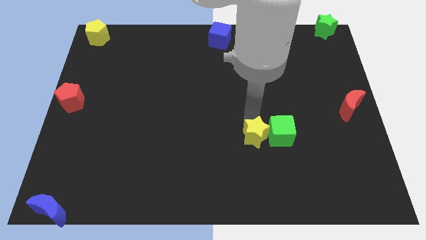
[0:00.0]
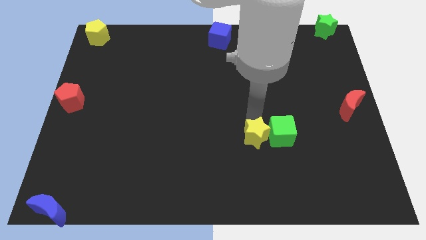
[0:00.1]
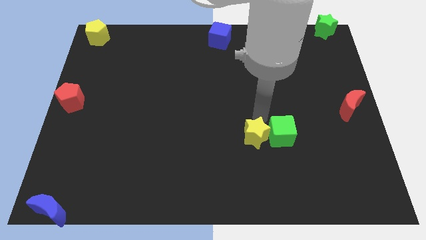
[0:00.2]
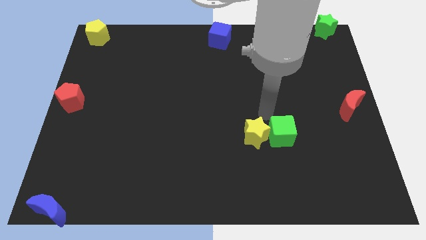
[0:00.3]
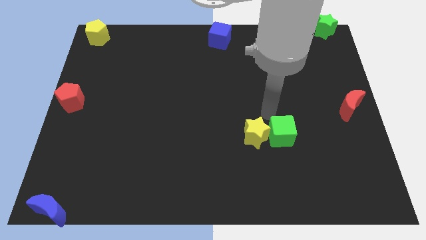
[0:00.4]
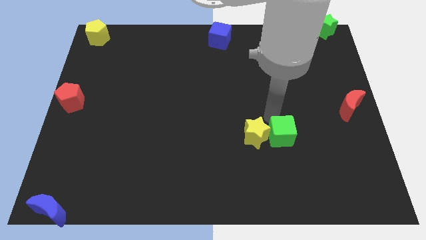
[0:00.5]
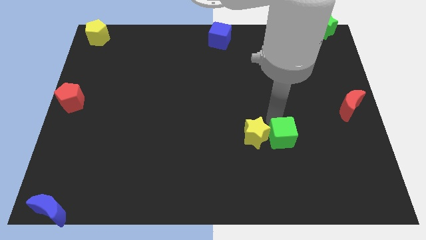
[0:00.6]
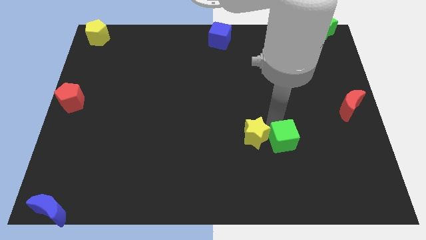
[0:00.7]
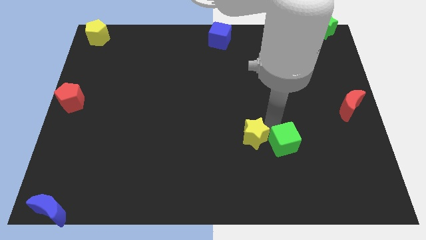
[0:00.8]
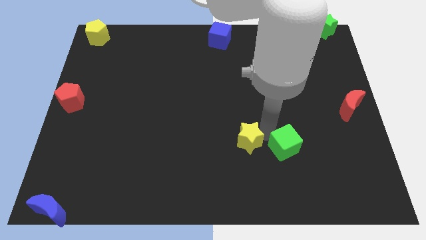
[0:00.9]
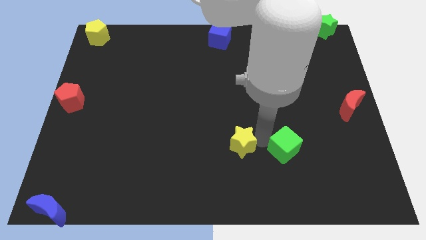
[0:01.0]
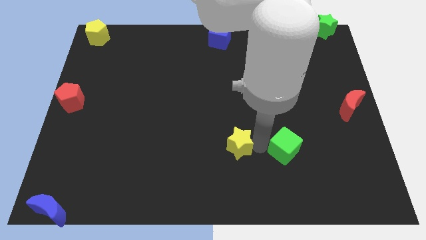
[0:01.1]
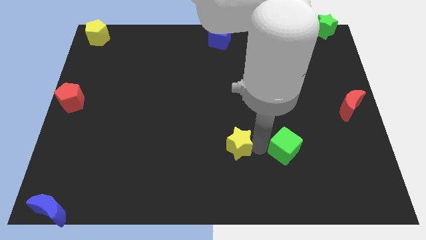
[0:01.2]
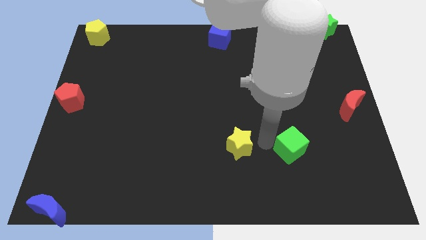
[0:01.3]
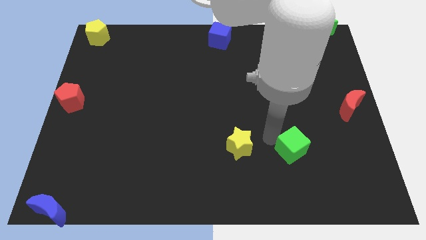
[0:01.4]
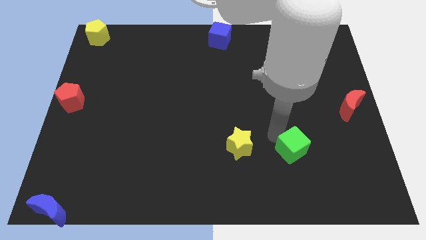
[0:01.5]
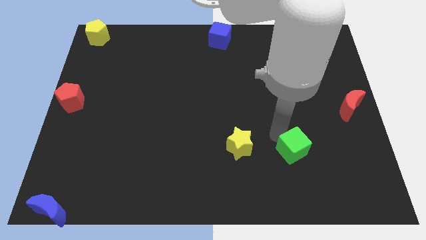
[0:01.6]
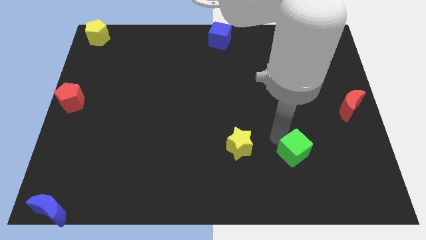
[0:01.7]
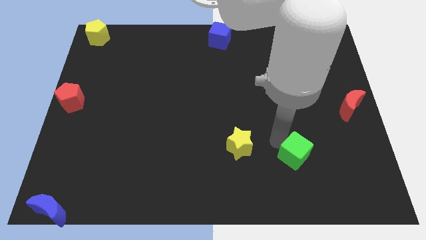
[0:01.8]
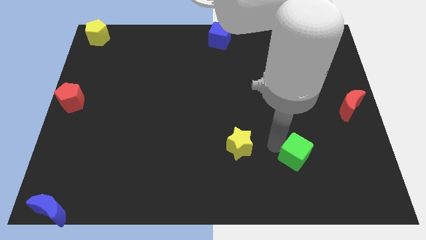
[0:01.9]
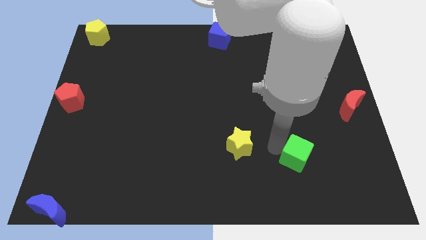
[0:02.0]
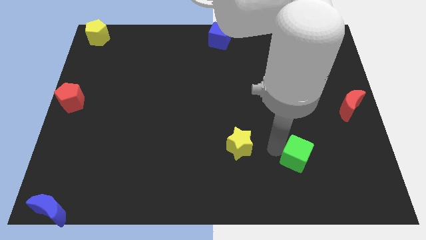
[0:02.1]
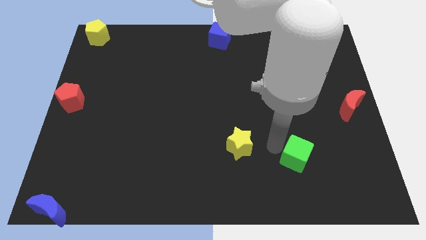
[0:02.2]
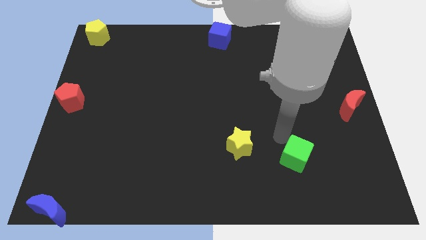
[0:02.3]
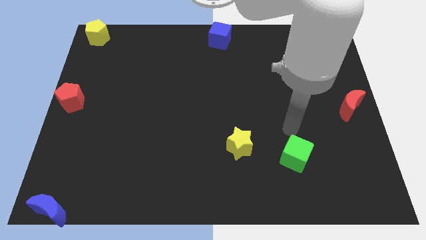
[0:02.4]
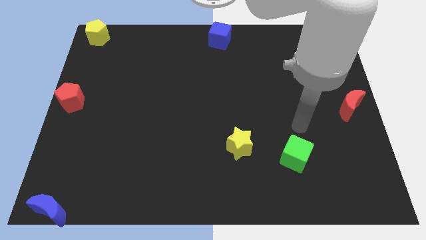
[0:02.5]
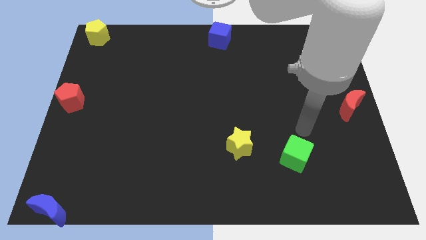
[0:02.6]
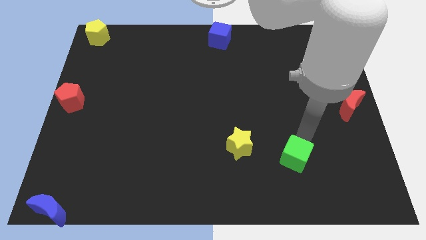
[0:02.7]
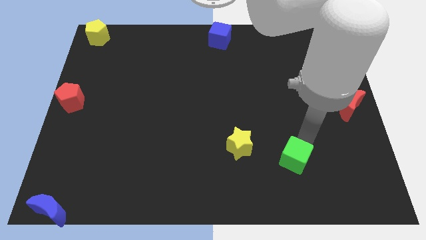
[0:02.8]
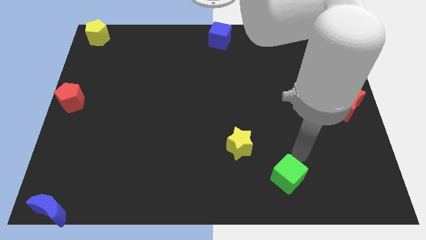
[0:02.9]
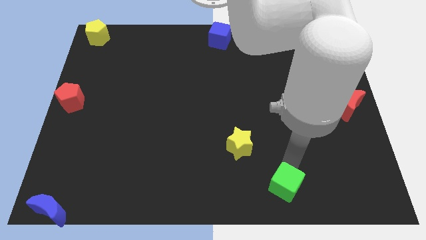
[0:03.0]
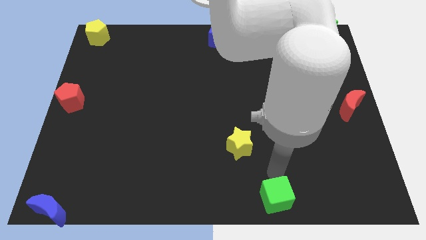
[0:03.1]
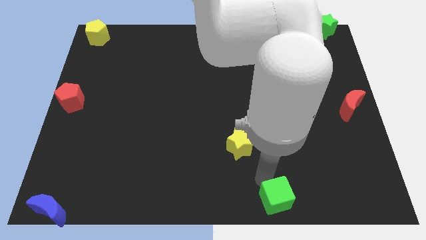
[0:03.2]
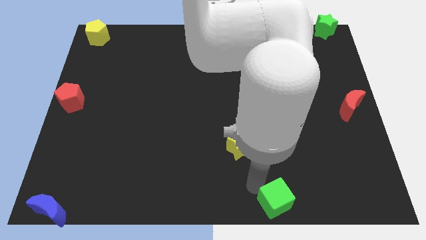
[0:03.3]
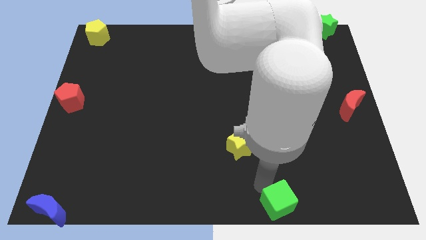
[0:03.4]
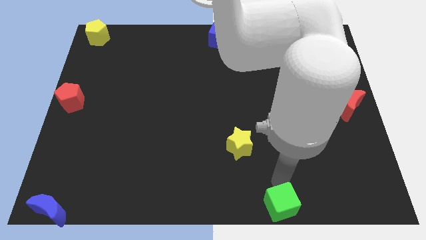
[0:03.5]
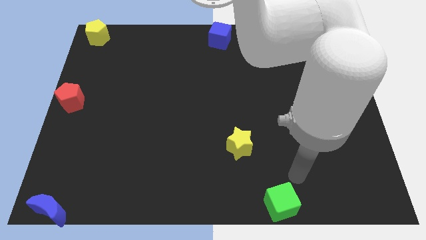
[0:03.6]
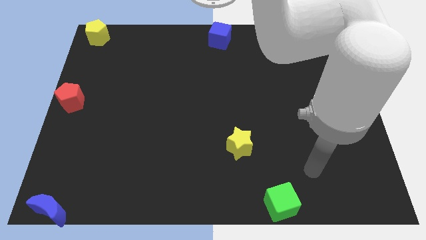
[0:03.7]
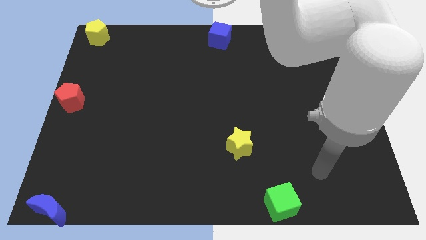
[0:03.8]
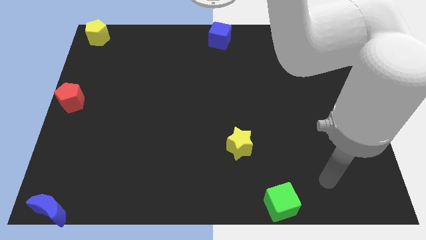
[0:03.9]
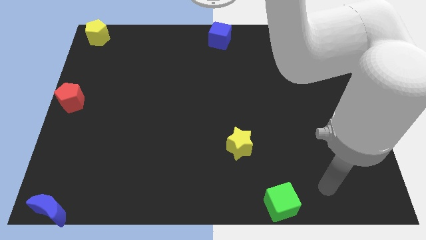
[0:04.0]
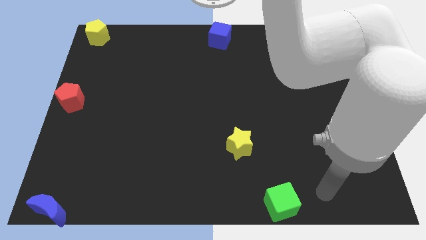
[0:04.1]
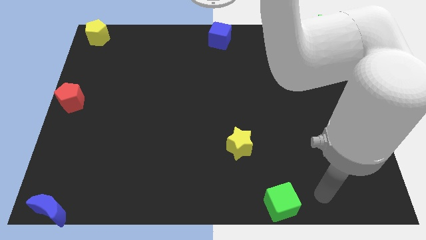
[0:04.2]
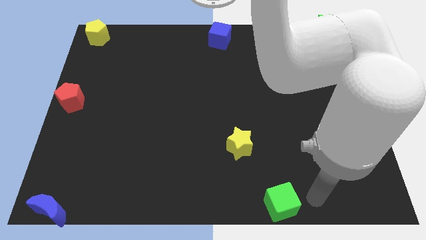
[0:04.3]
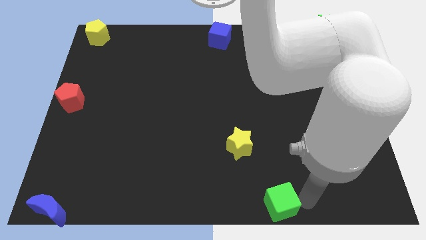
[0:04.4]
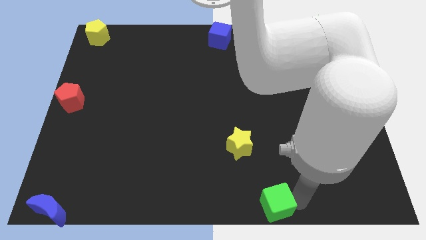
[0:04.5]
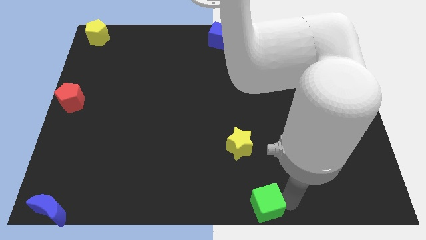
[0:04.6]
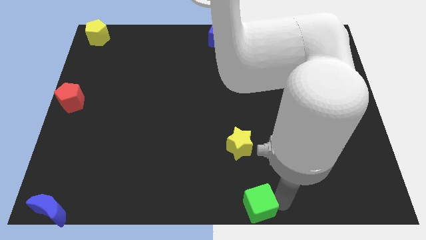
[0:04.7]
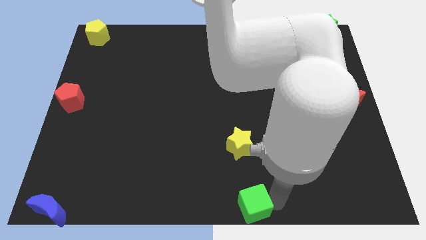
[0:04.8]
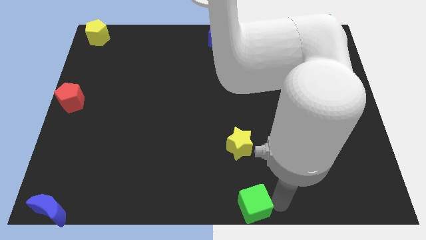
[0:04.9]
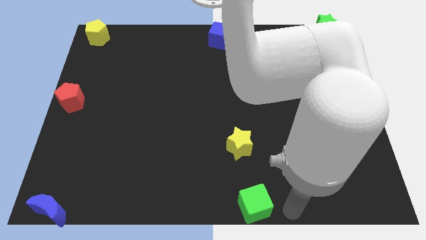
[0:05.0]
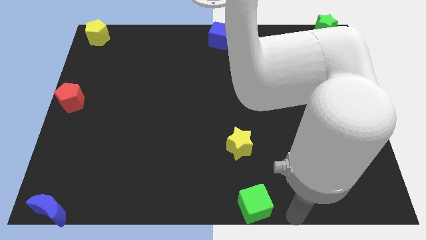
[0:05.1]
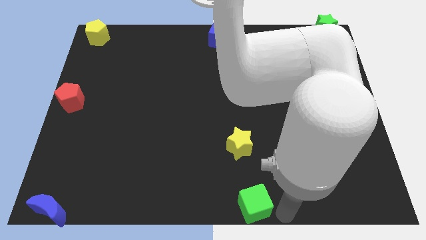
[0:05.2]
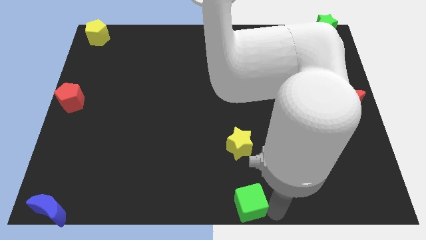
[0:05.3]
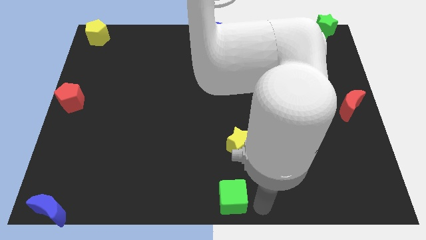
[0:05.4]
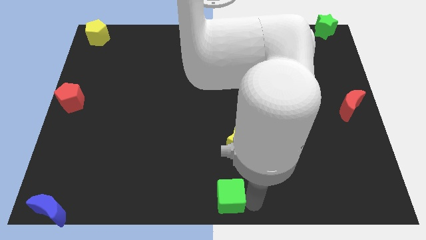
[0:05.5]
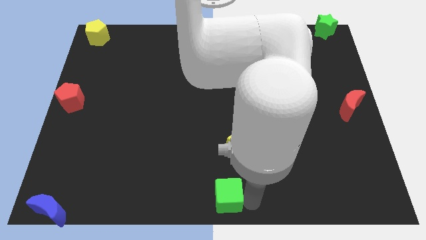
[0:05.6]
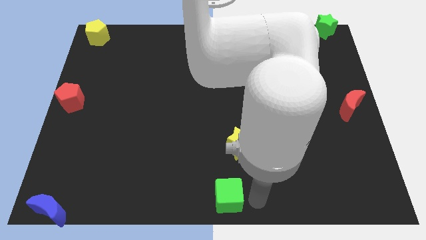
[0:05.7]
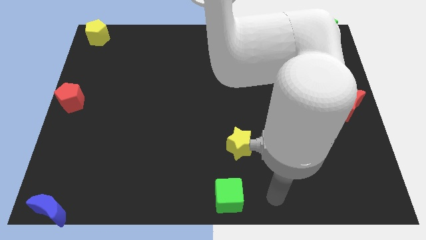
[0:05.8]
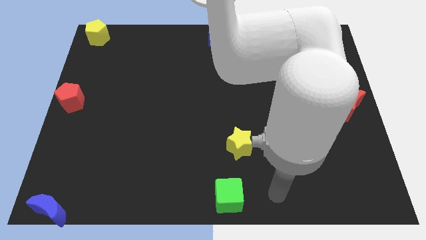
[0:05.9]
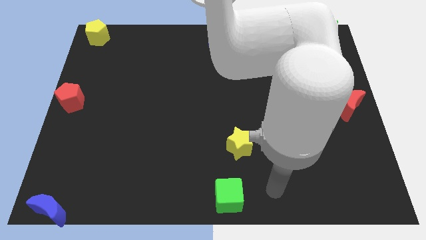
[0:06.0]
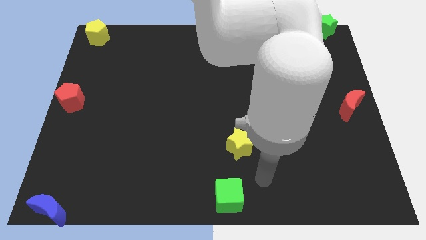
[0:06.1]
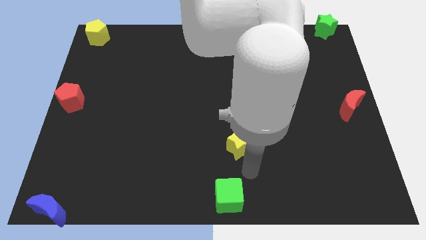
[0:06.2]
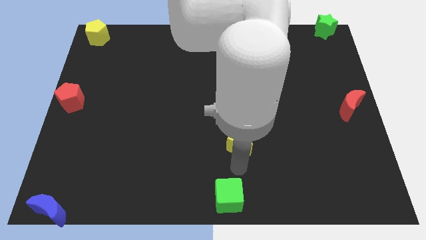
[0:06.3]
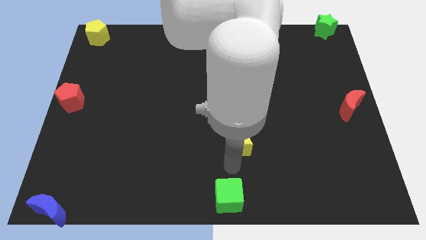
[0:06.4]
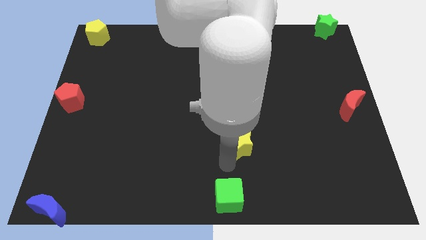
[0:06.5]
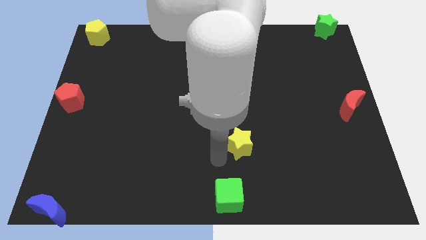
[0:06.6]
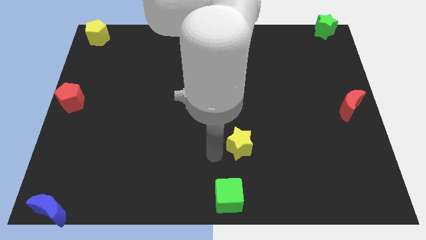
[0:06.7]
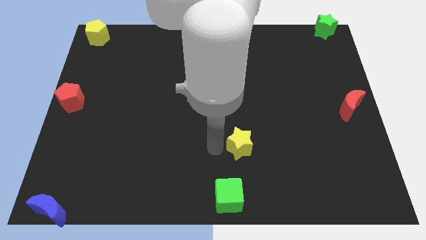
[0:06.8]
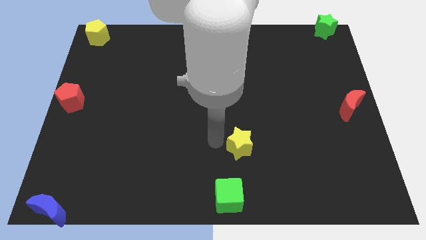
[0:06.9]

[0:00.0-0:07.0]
push yellow star and green block

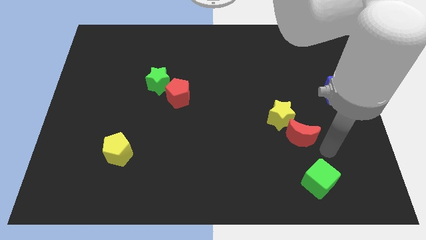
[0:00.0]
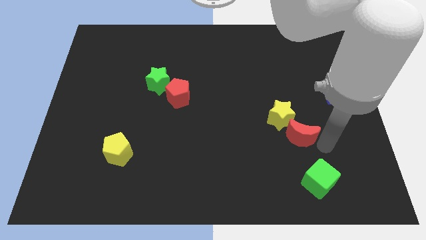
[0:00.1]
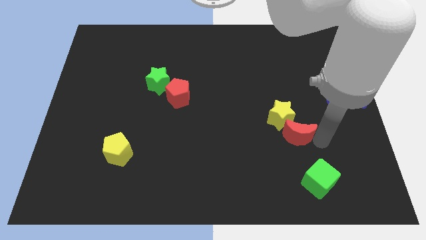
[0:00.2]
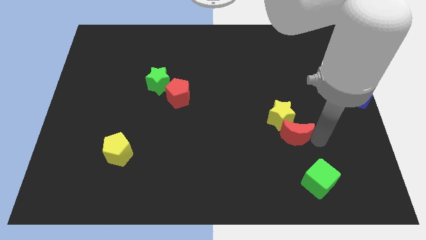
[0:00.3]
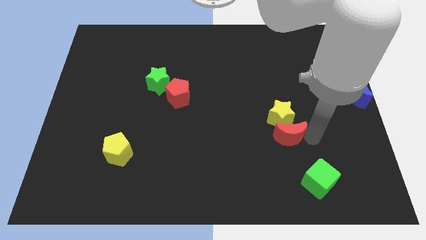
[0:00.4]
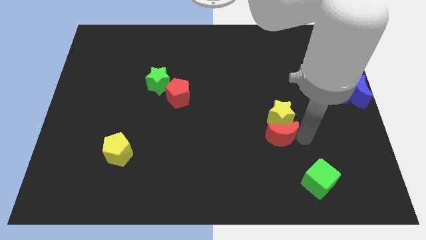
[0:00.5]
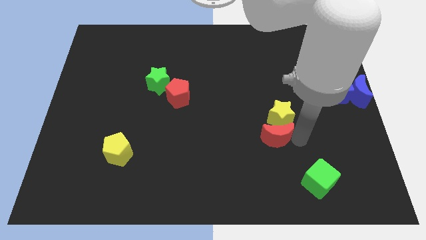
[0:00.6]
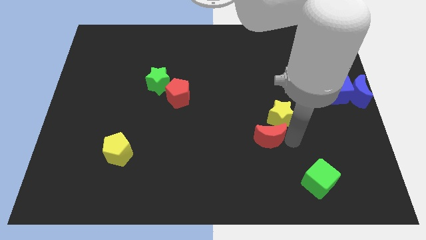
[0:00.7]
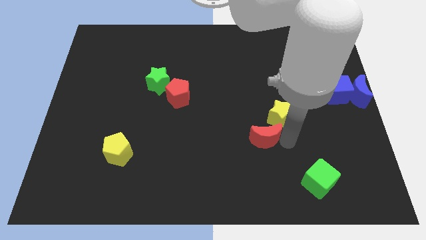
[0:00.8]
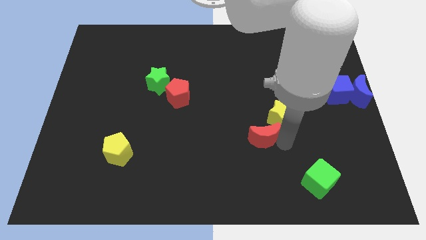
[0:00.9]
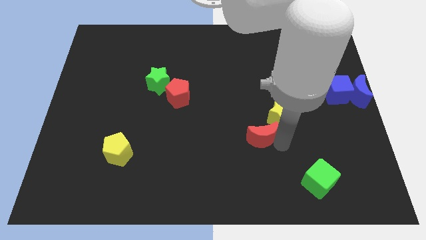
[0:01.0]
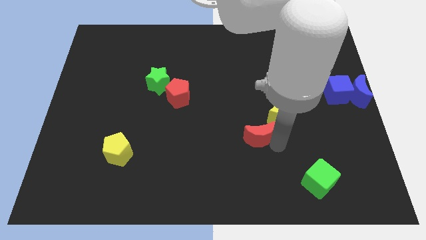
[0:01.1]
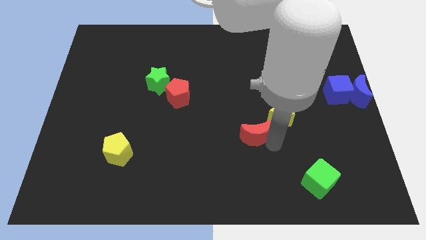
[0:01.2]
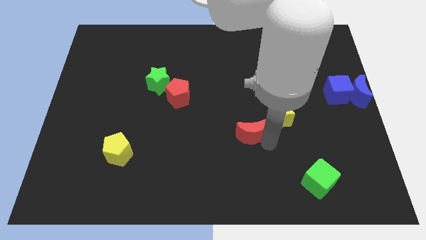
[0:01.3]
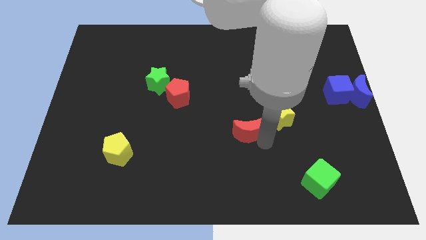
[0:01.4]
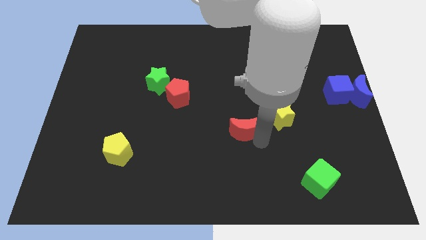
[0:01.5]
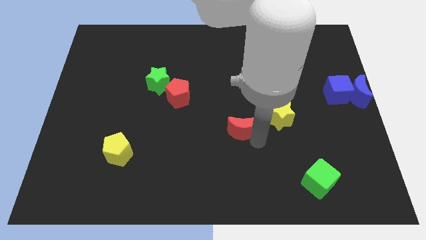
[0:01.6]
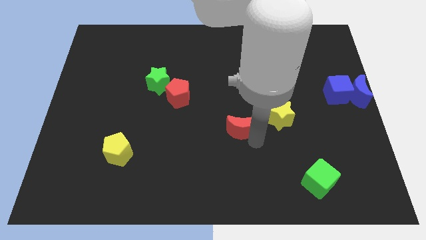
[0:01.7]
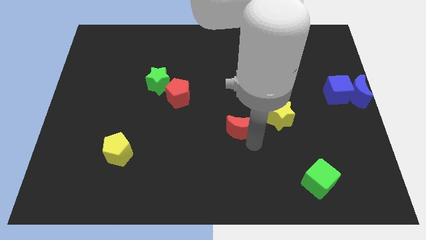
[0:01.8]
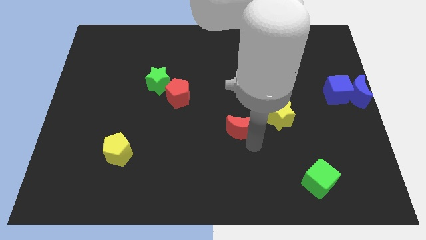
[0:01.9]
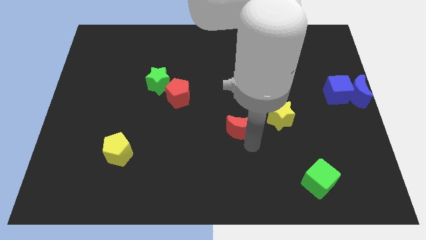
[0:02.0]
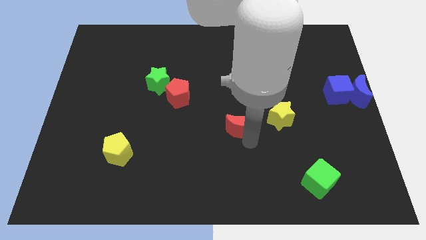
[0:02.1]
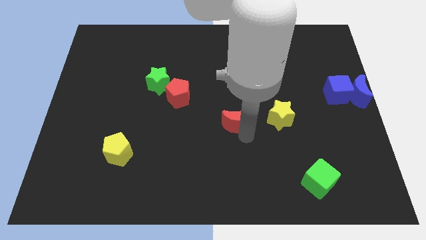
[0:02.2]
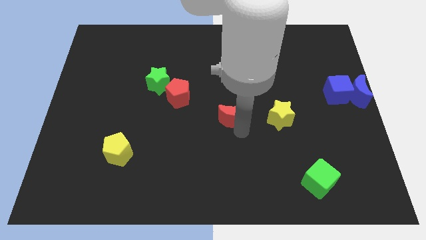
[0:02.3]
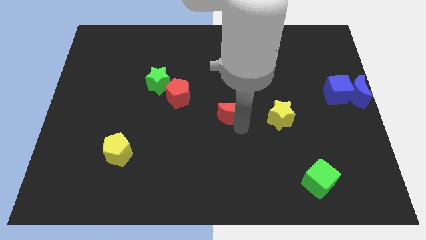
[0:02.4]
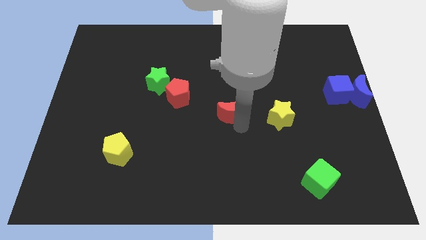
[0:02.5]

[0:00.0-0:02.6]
separate red moon from the yellow star
